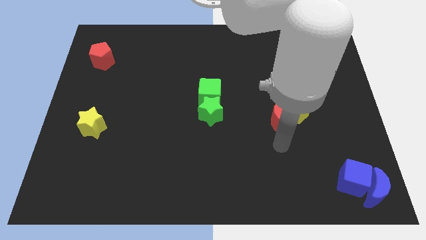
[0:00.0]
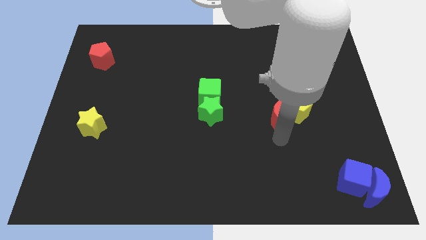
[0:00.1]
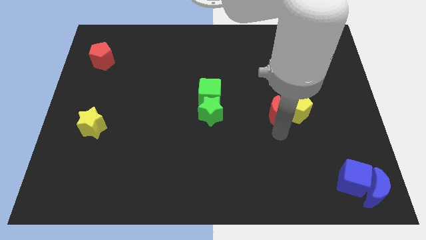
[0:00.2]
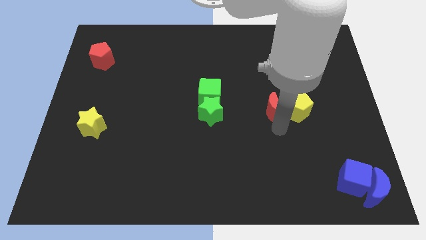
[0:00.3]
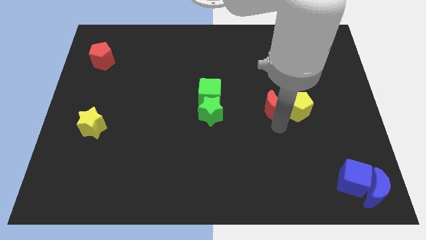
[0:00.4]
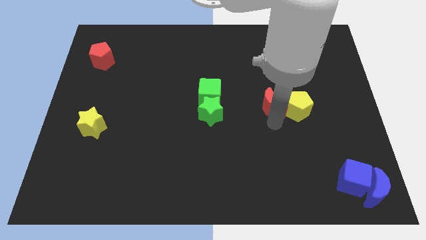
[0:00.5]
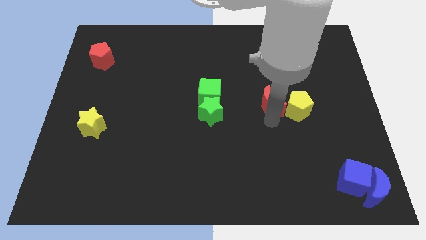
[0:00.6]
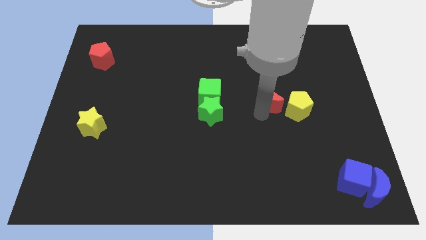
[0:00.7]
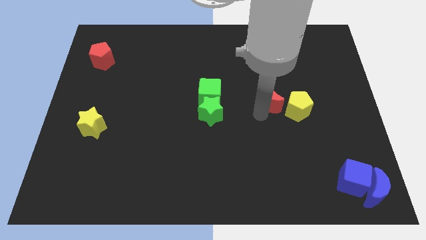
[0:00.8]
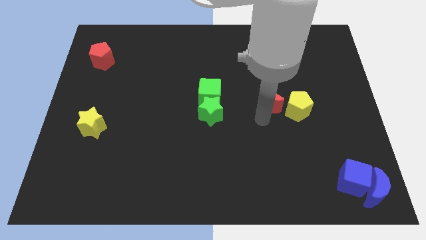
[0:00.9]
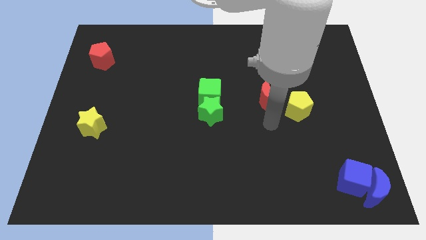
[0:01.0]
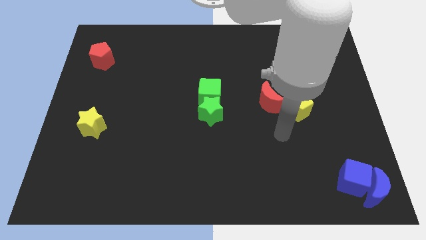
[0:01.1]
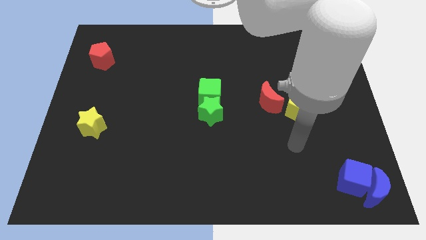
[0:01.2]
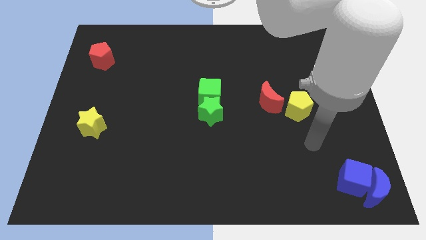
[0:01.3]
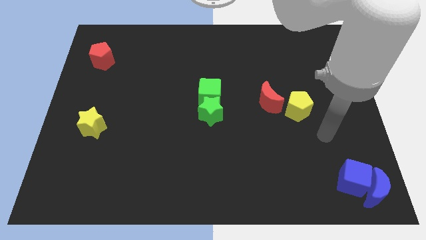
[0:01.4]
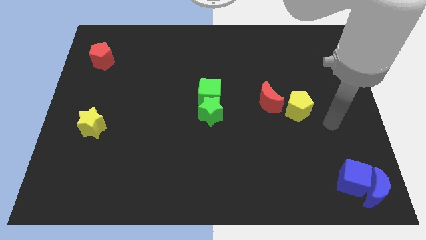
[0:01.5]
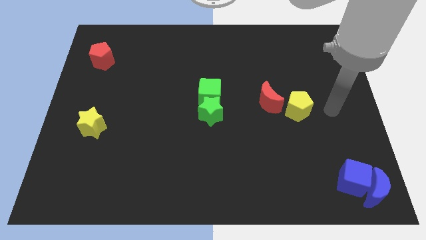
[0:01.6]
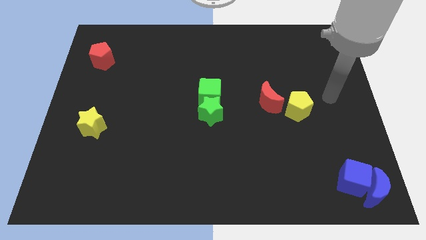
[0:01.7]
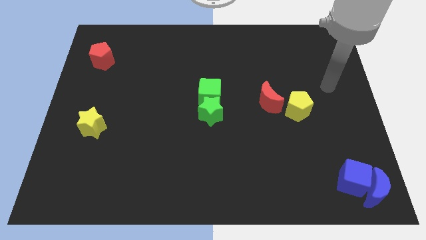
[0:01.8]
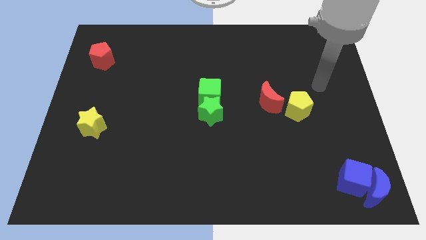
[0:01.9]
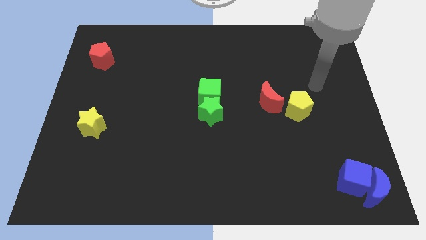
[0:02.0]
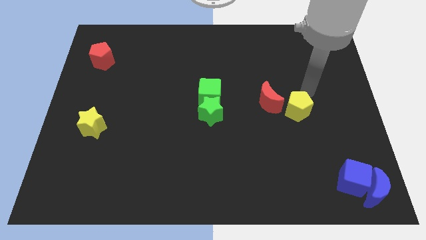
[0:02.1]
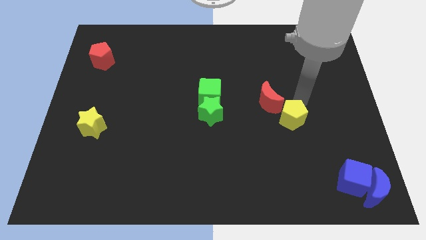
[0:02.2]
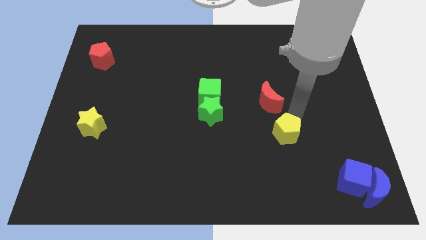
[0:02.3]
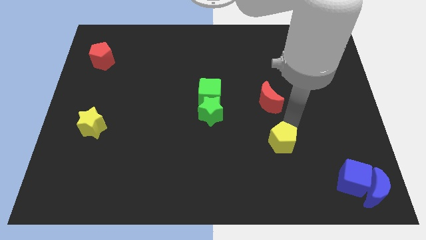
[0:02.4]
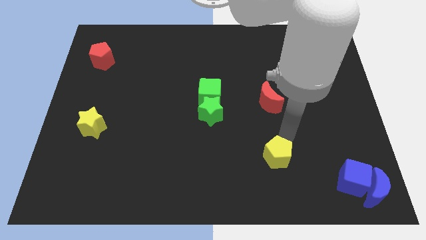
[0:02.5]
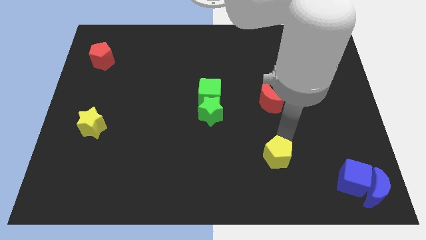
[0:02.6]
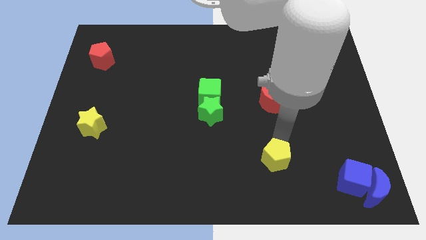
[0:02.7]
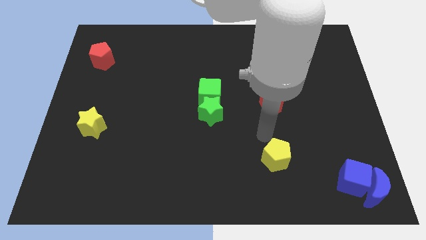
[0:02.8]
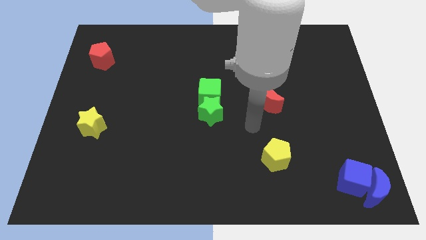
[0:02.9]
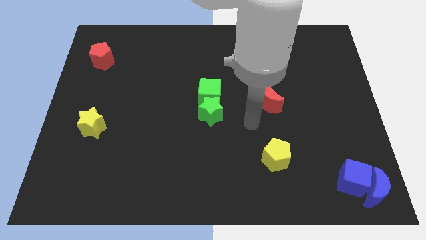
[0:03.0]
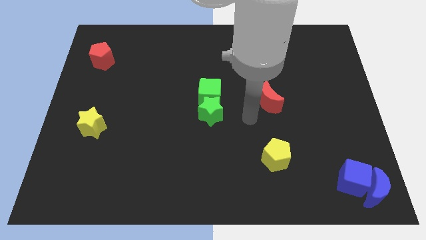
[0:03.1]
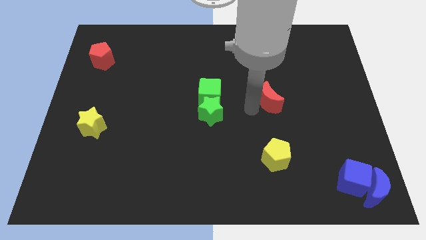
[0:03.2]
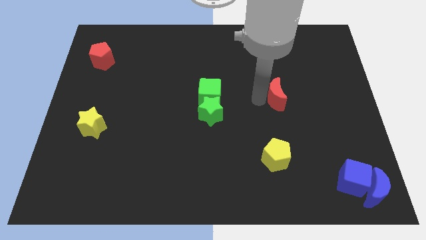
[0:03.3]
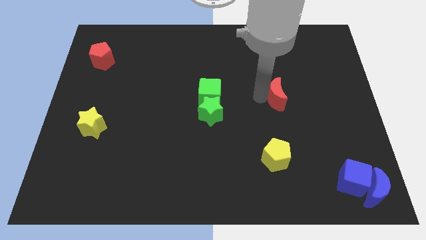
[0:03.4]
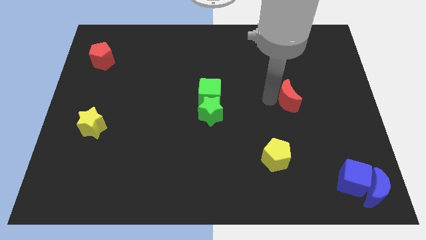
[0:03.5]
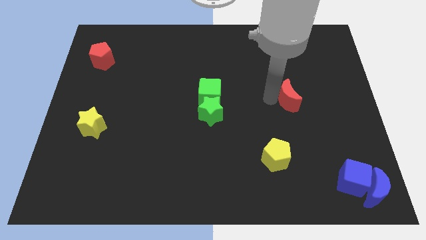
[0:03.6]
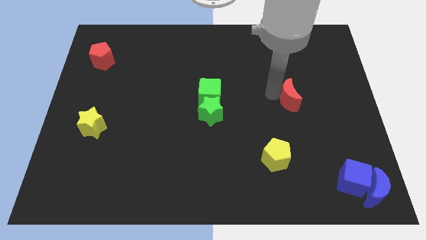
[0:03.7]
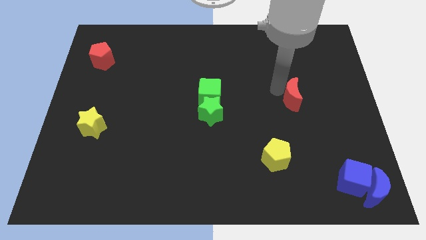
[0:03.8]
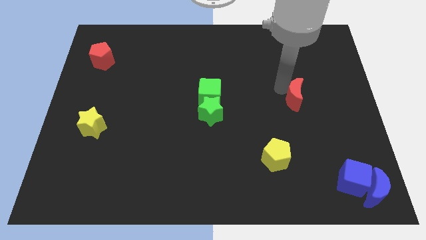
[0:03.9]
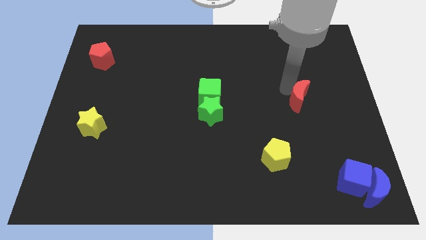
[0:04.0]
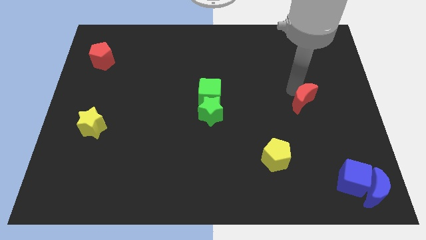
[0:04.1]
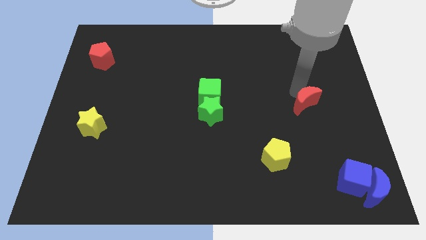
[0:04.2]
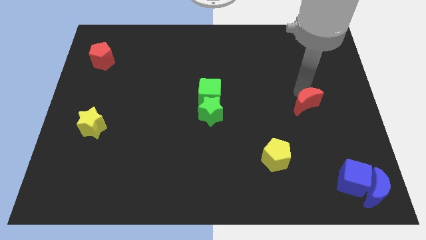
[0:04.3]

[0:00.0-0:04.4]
move the red crescent towards the left side of the yellow pentagon

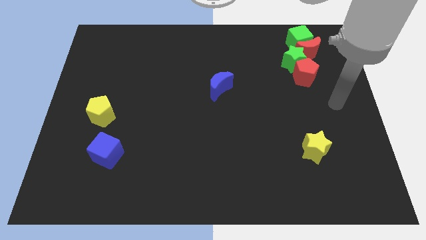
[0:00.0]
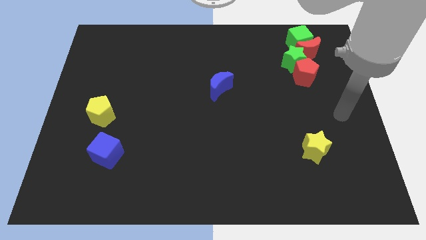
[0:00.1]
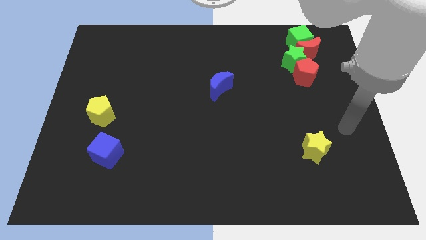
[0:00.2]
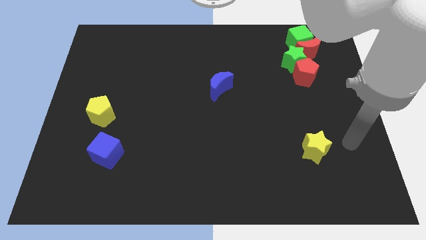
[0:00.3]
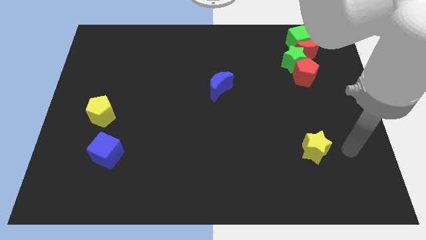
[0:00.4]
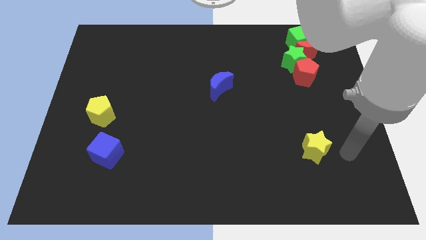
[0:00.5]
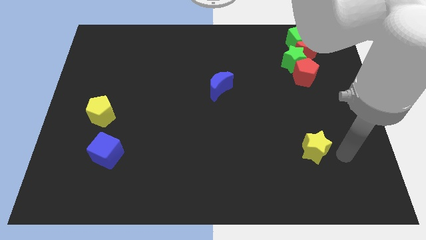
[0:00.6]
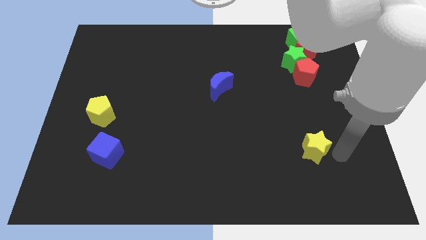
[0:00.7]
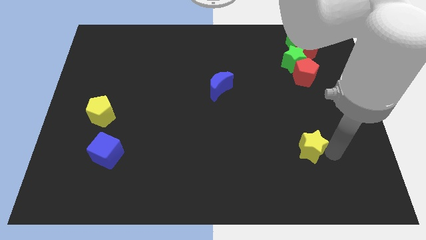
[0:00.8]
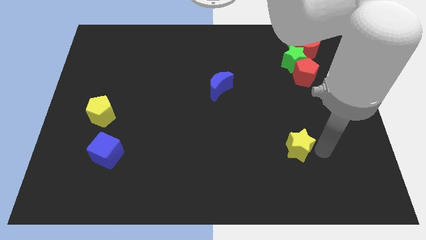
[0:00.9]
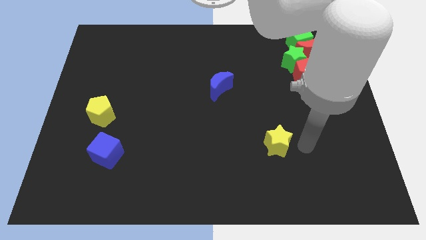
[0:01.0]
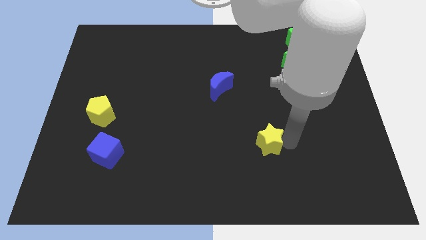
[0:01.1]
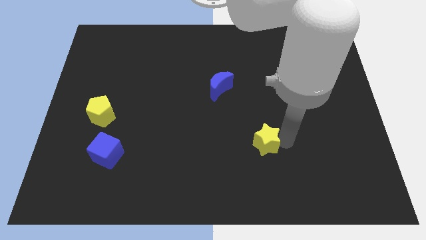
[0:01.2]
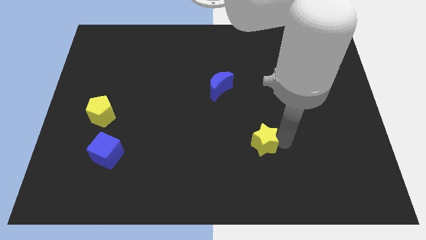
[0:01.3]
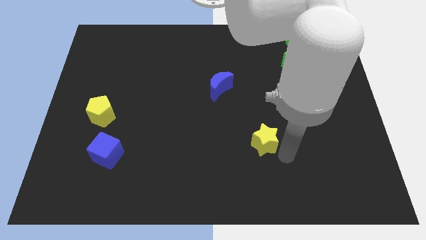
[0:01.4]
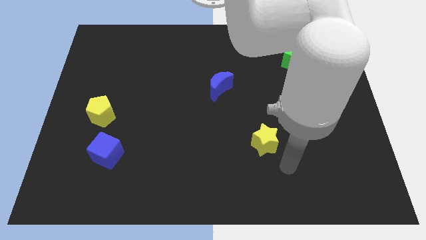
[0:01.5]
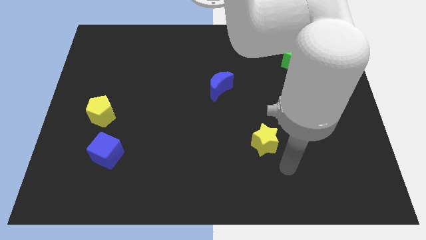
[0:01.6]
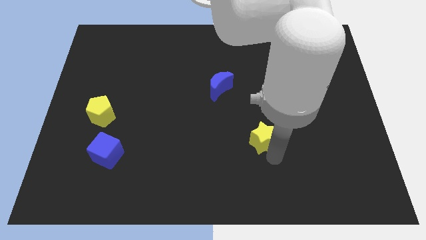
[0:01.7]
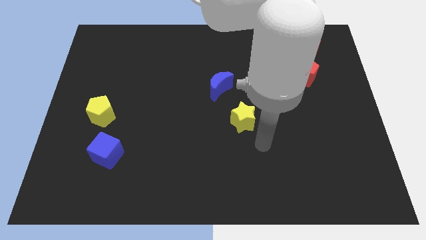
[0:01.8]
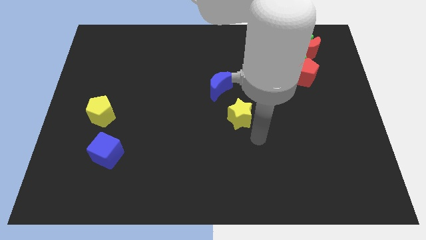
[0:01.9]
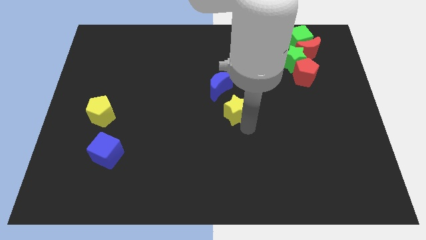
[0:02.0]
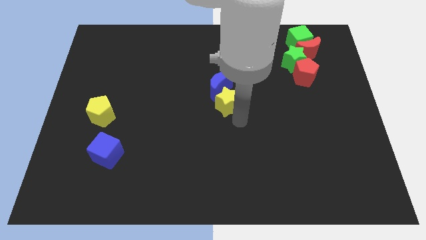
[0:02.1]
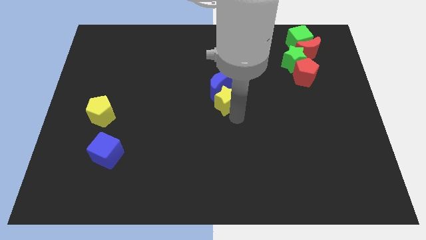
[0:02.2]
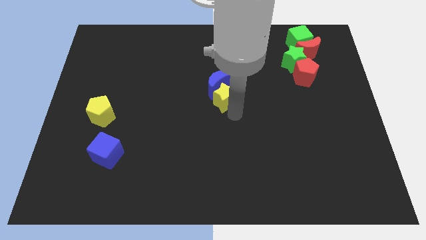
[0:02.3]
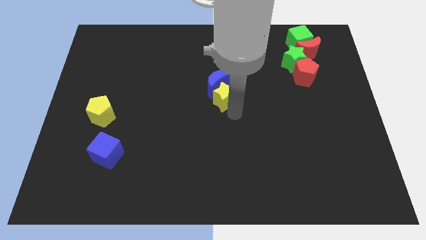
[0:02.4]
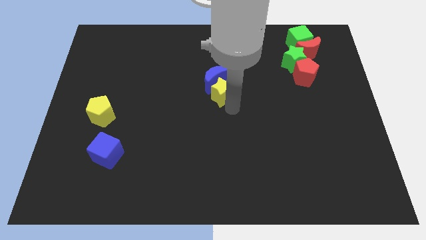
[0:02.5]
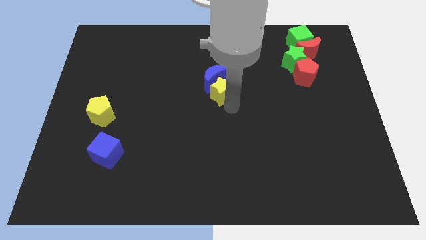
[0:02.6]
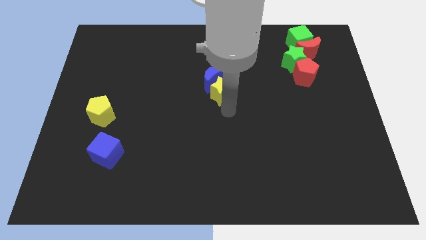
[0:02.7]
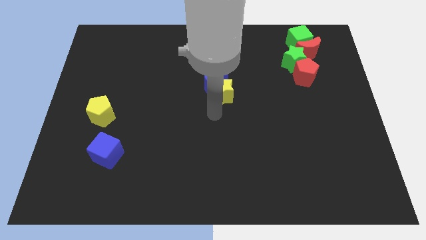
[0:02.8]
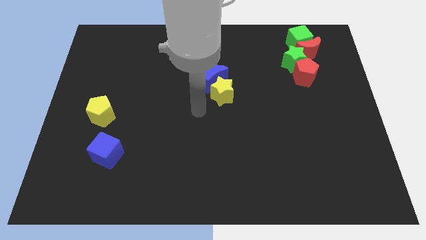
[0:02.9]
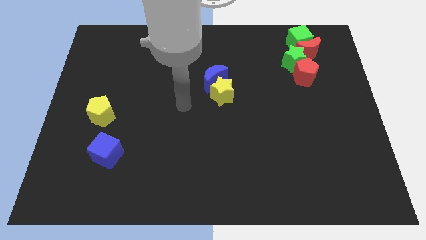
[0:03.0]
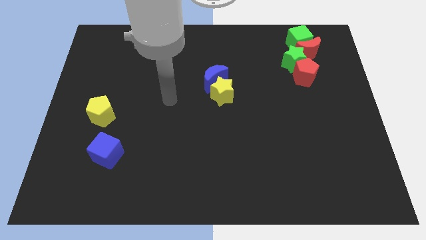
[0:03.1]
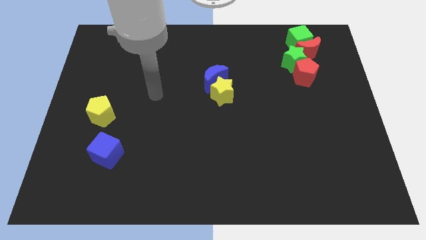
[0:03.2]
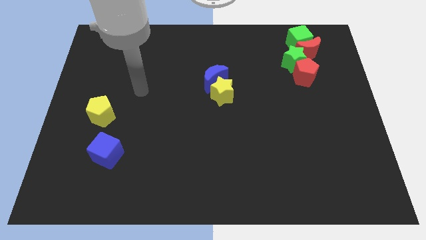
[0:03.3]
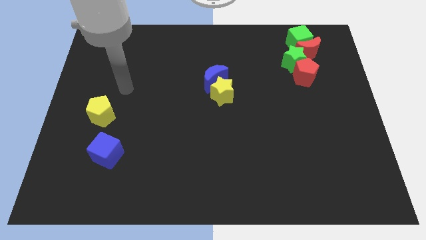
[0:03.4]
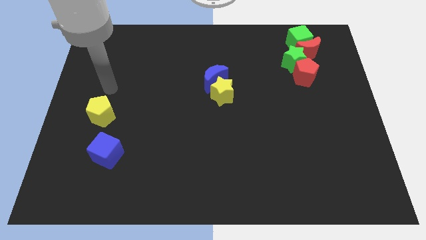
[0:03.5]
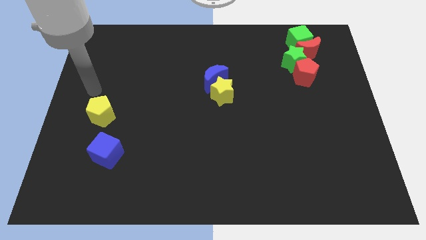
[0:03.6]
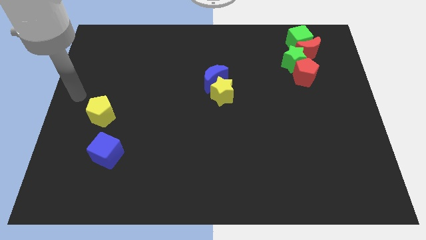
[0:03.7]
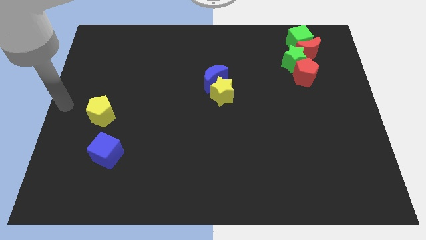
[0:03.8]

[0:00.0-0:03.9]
move the yellow star to the bottom of the blue crescent

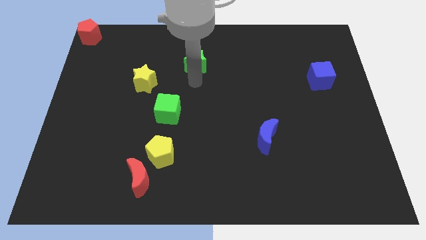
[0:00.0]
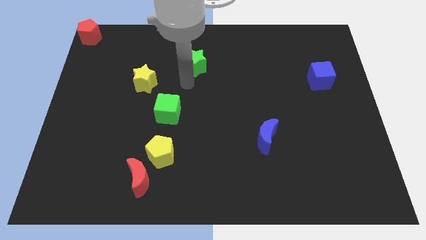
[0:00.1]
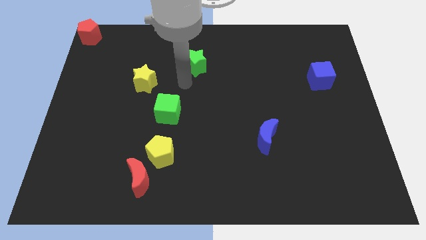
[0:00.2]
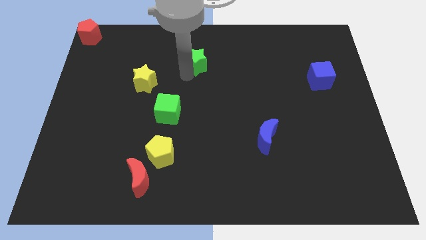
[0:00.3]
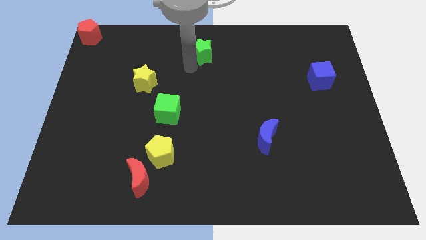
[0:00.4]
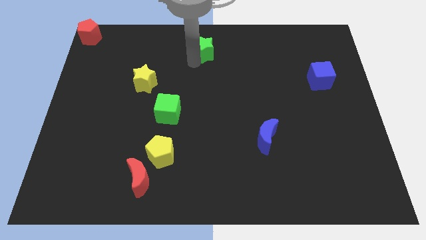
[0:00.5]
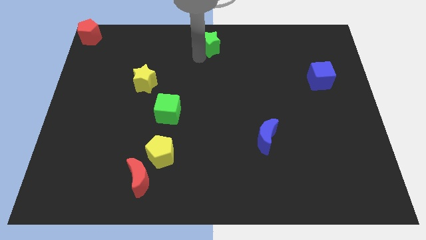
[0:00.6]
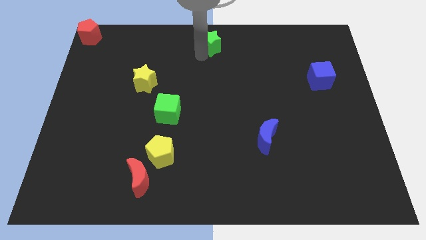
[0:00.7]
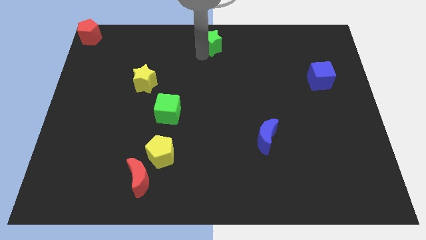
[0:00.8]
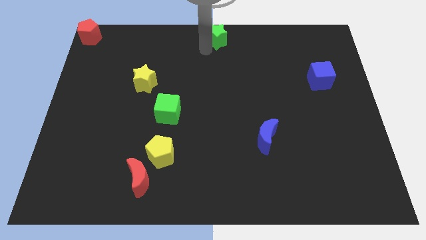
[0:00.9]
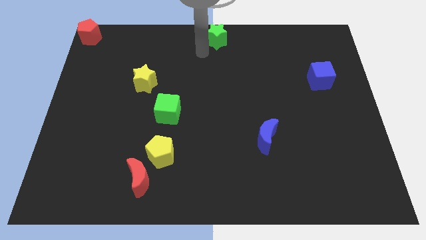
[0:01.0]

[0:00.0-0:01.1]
place green star towards the top center of the board
